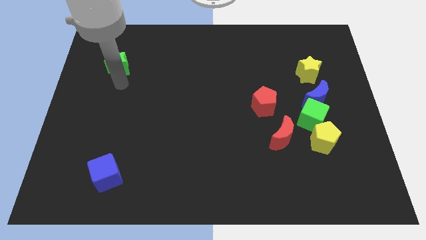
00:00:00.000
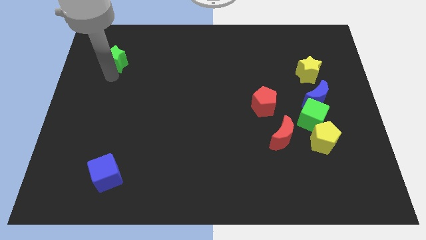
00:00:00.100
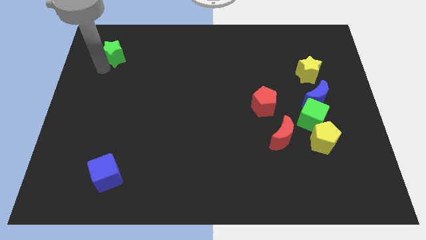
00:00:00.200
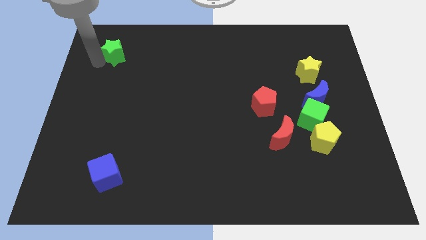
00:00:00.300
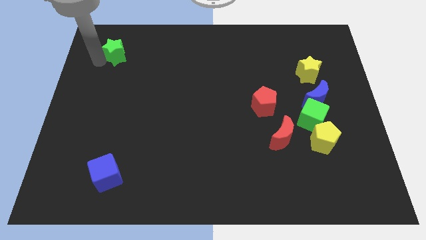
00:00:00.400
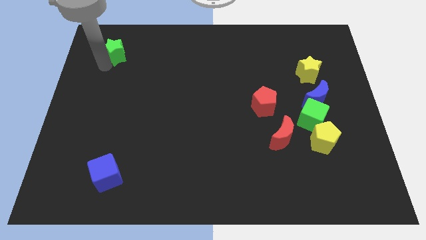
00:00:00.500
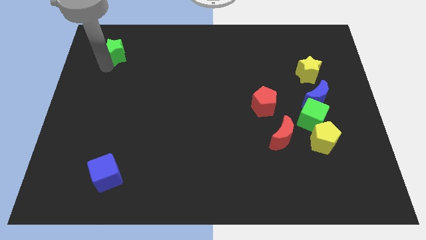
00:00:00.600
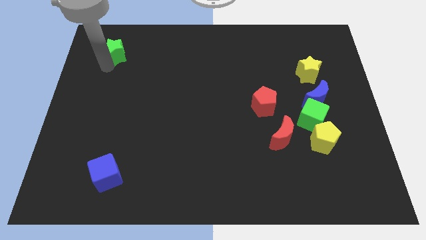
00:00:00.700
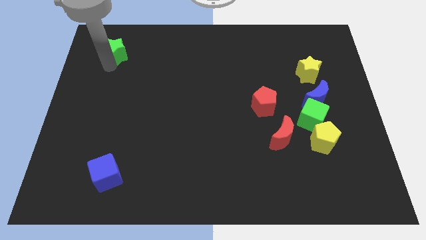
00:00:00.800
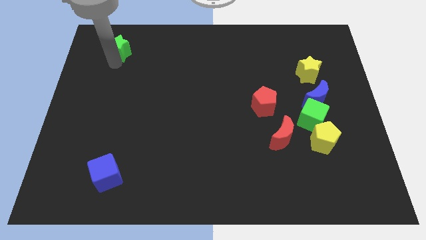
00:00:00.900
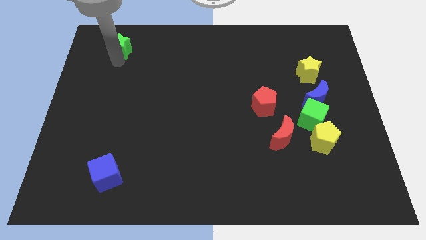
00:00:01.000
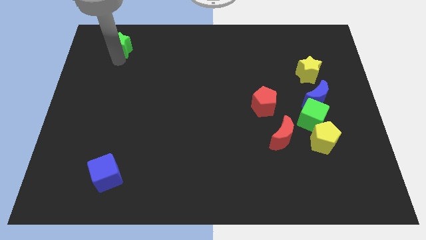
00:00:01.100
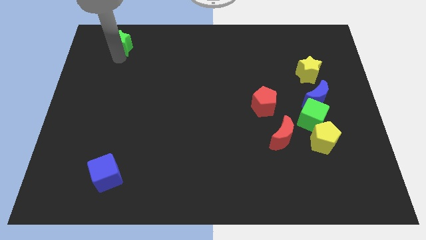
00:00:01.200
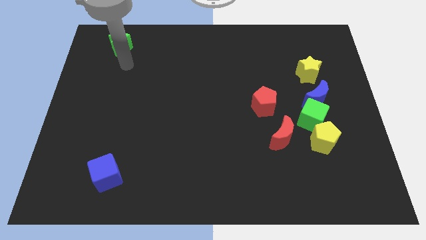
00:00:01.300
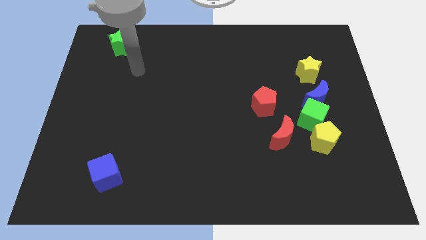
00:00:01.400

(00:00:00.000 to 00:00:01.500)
move green star upwards

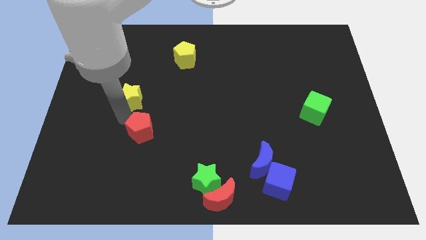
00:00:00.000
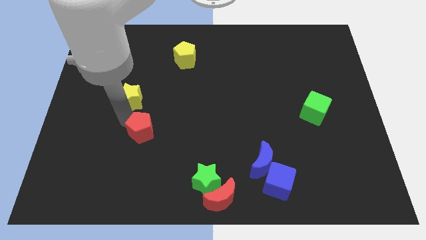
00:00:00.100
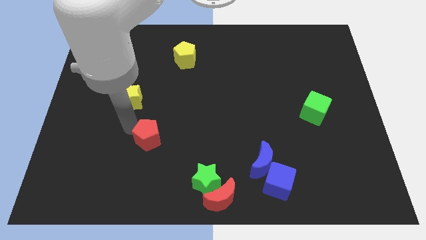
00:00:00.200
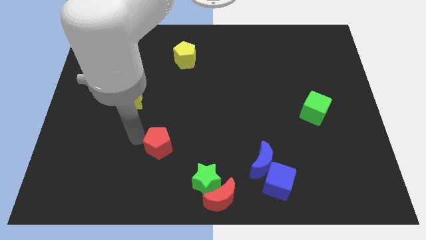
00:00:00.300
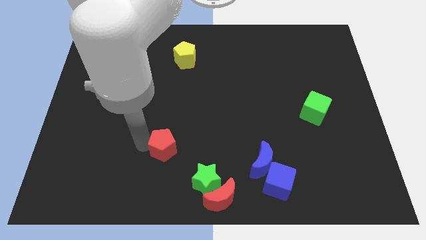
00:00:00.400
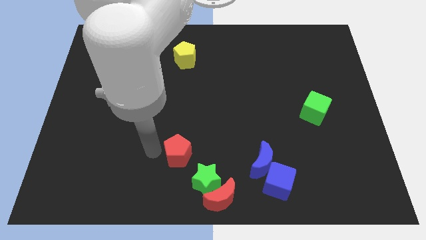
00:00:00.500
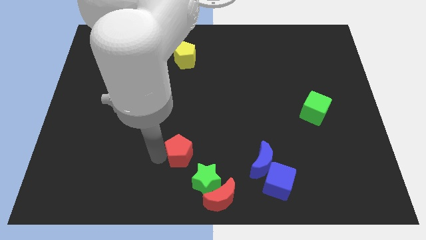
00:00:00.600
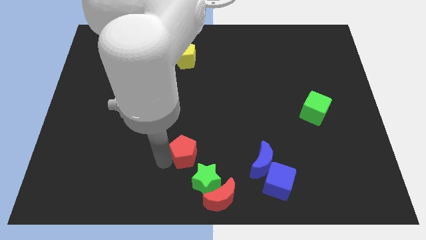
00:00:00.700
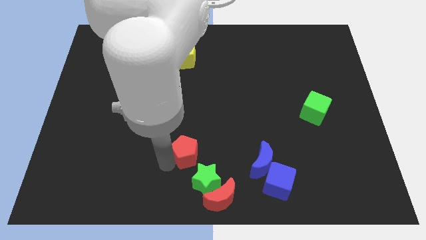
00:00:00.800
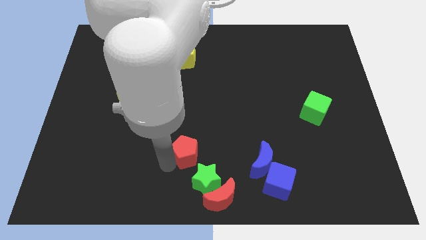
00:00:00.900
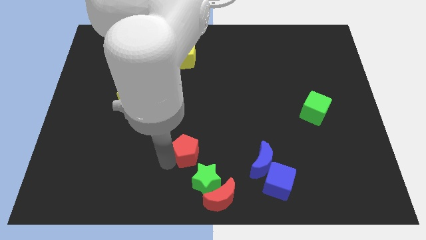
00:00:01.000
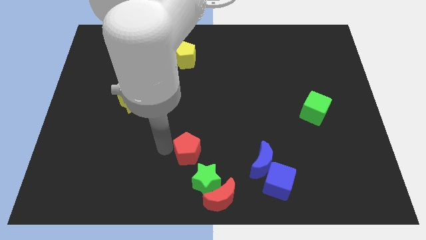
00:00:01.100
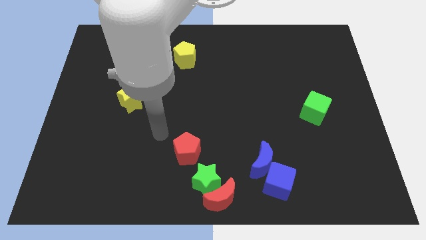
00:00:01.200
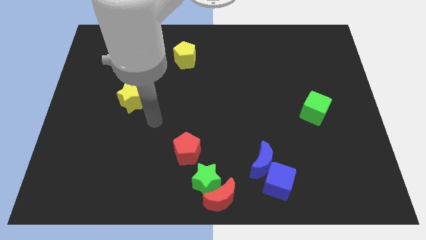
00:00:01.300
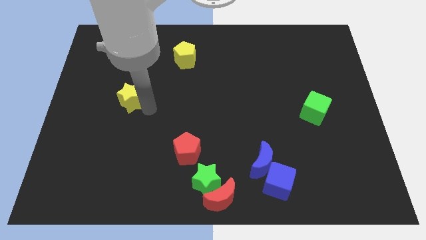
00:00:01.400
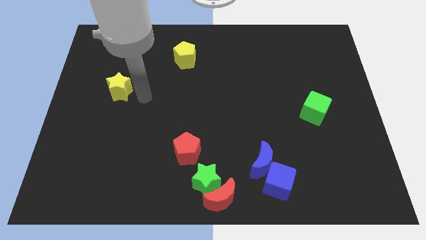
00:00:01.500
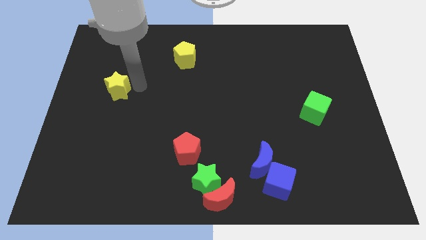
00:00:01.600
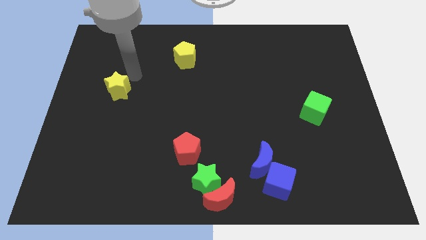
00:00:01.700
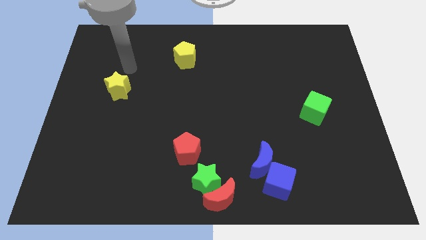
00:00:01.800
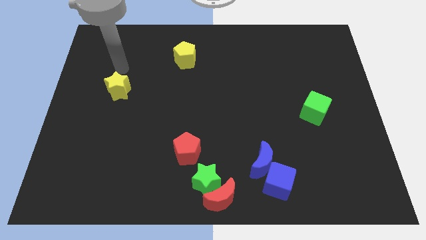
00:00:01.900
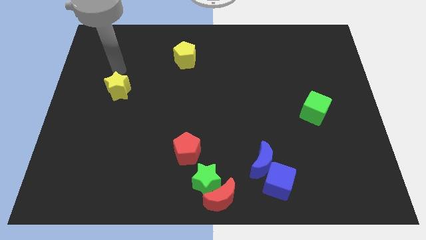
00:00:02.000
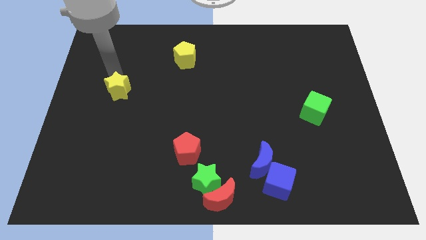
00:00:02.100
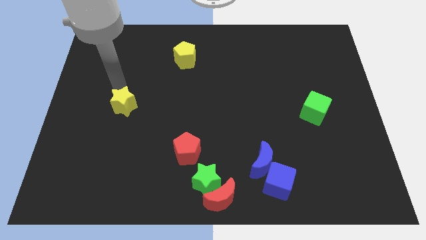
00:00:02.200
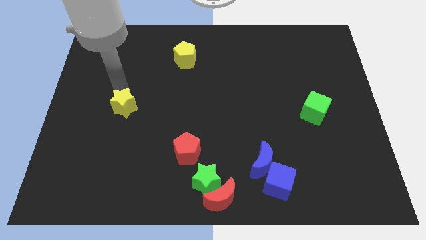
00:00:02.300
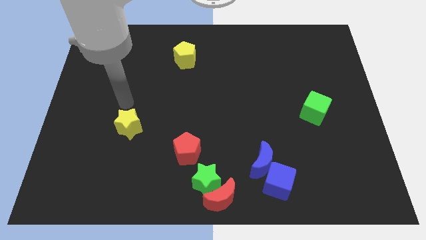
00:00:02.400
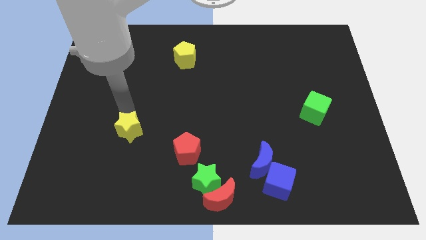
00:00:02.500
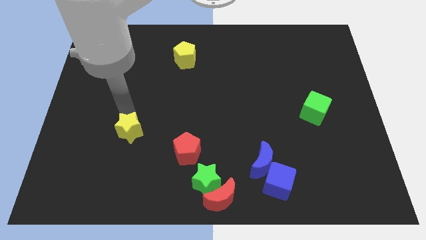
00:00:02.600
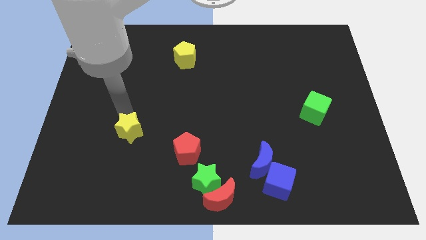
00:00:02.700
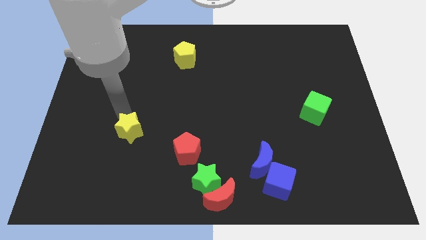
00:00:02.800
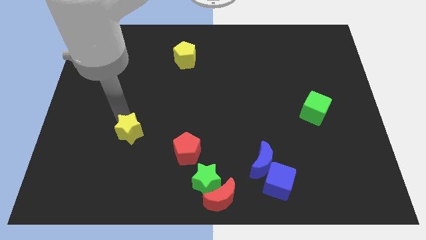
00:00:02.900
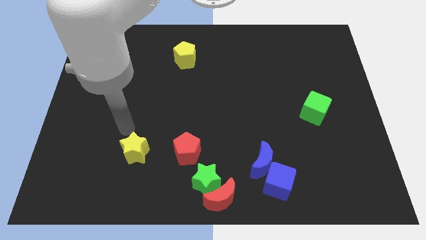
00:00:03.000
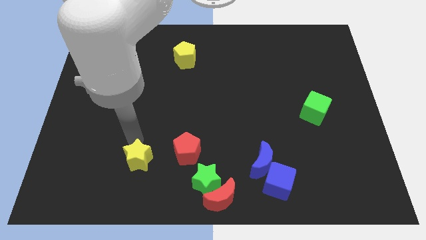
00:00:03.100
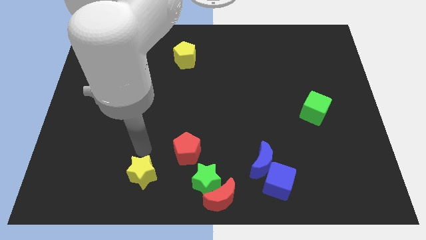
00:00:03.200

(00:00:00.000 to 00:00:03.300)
place the yellow star parallel to the red pentagon

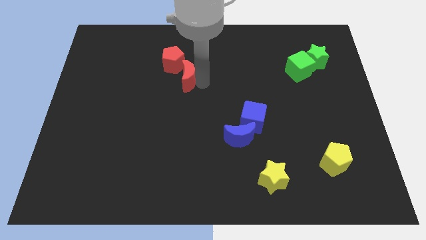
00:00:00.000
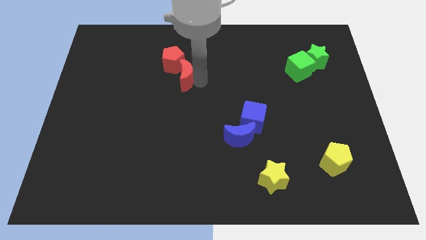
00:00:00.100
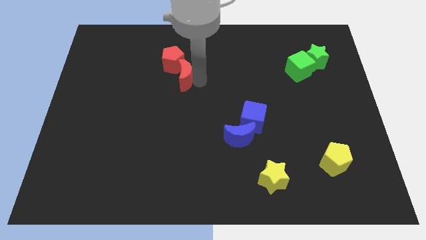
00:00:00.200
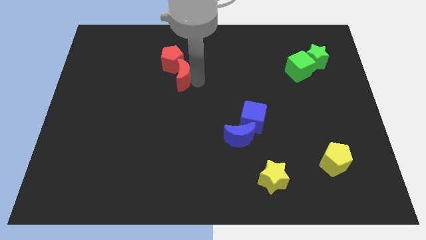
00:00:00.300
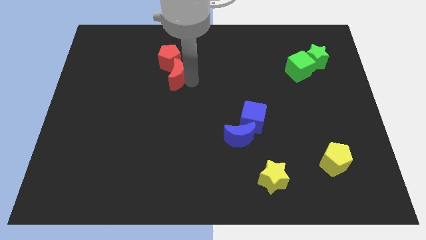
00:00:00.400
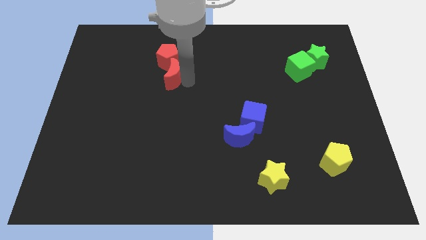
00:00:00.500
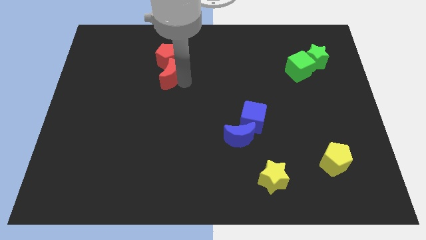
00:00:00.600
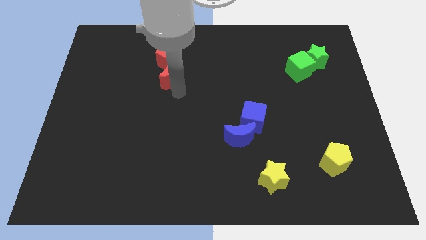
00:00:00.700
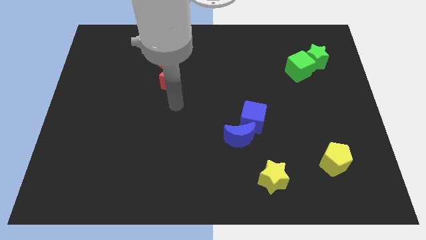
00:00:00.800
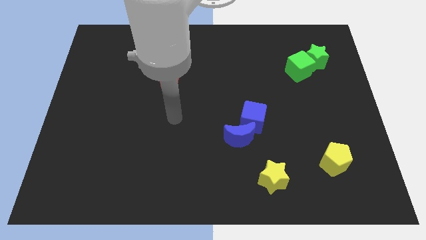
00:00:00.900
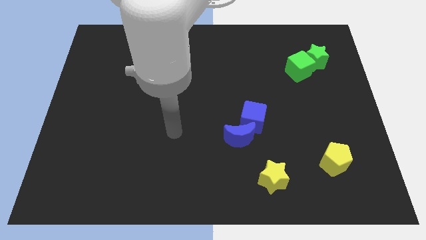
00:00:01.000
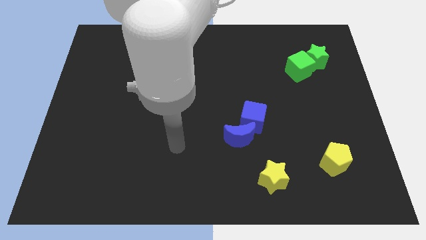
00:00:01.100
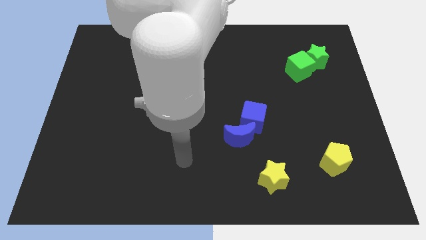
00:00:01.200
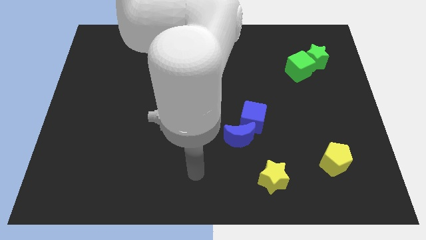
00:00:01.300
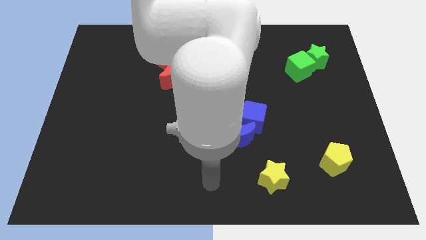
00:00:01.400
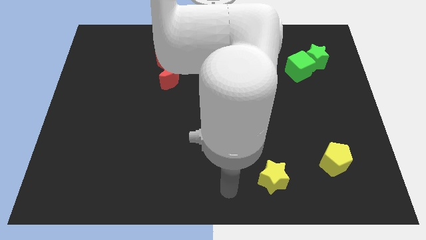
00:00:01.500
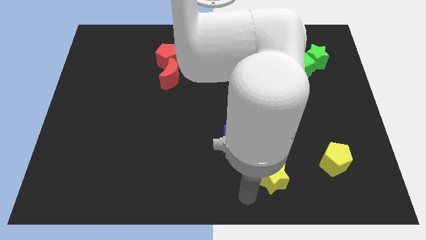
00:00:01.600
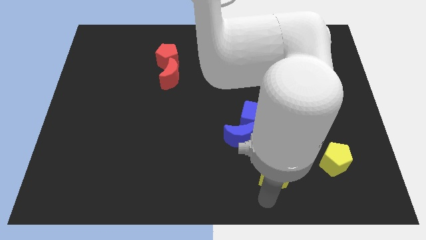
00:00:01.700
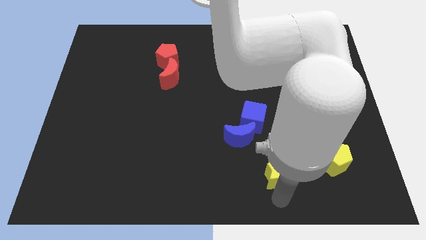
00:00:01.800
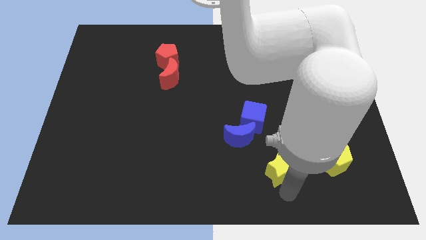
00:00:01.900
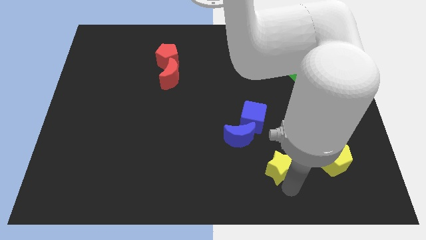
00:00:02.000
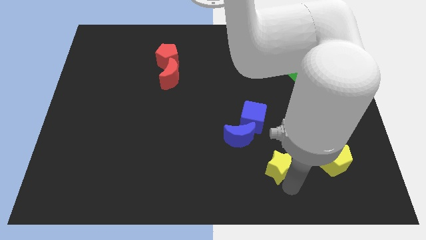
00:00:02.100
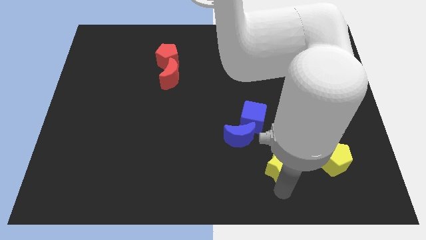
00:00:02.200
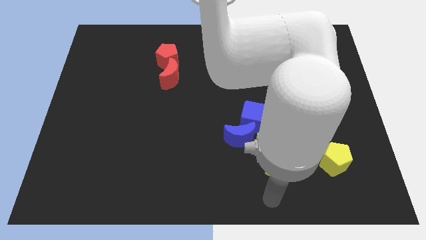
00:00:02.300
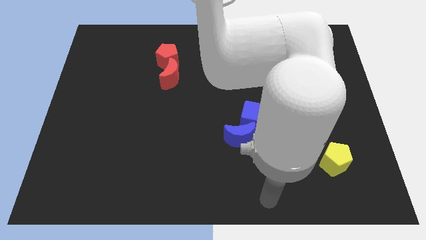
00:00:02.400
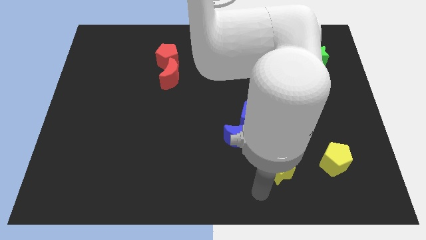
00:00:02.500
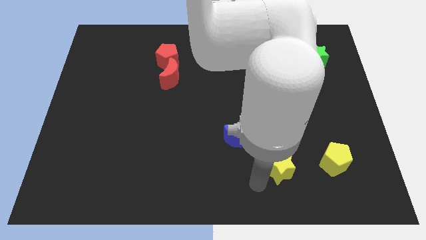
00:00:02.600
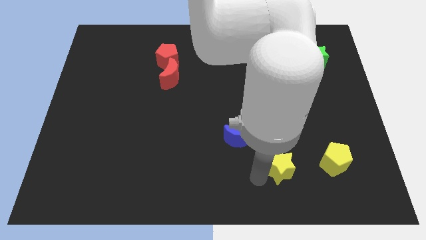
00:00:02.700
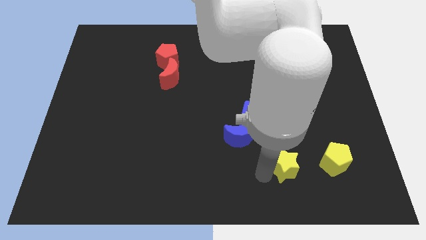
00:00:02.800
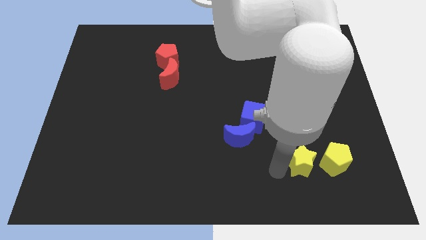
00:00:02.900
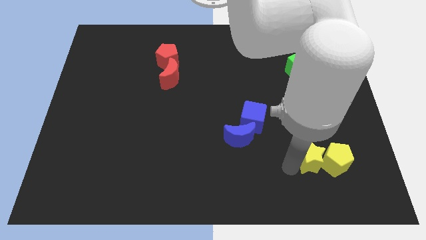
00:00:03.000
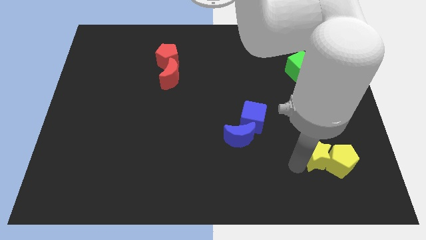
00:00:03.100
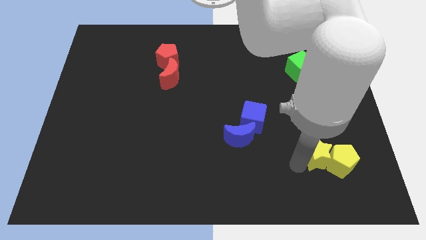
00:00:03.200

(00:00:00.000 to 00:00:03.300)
move yellow star towards yellow penatgon

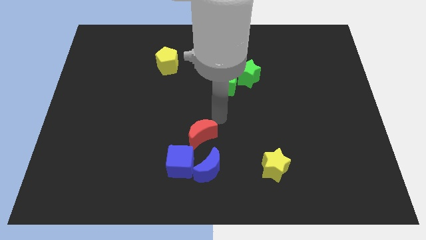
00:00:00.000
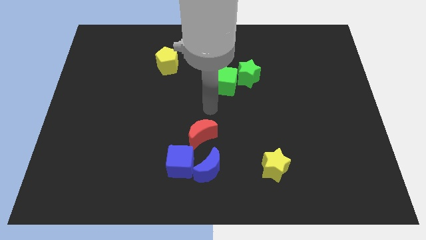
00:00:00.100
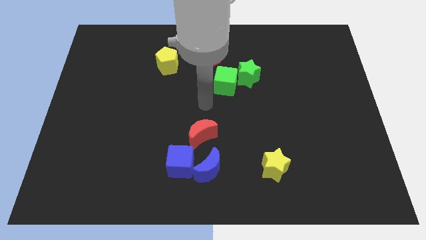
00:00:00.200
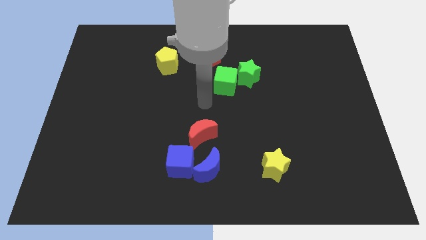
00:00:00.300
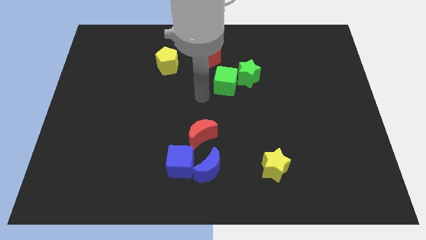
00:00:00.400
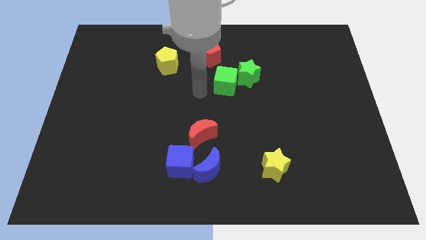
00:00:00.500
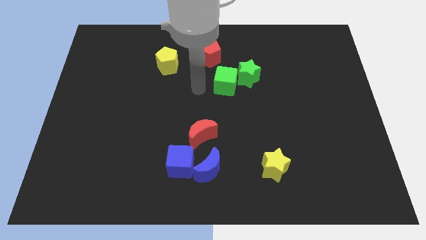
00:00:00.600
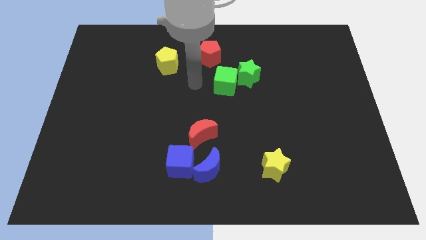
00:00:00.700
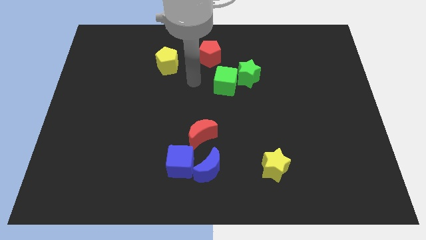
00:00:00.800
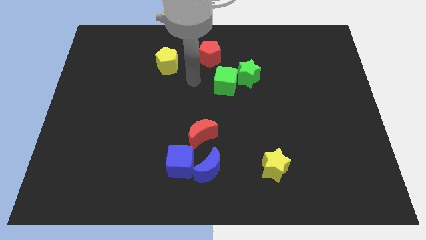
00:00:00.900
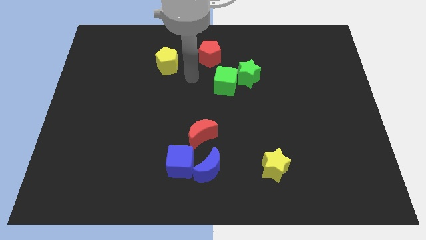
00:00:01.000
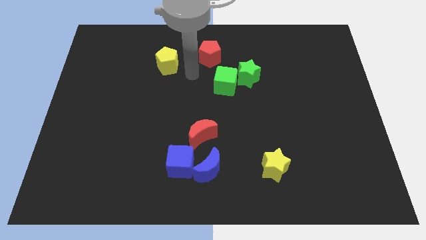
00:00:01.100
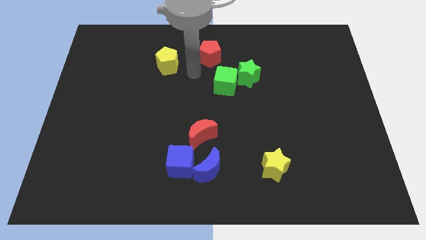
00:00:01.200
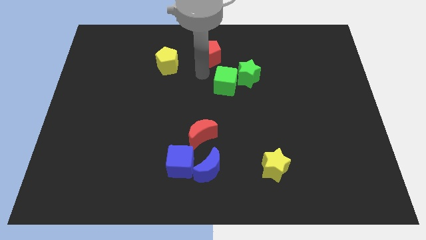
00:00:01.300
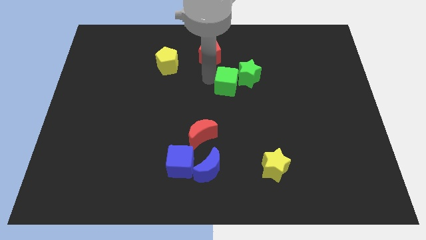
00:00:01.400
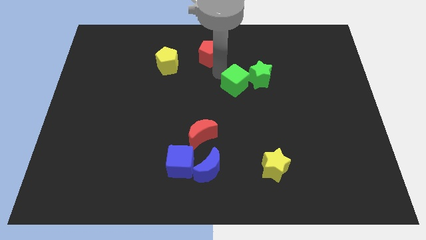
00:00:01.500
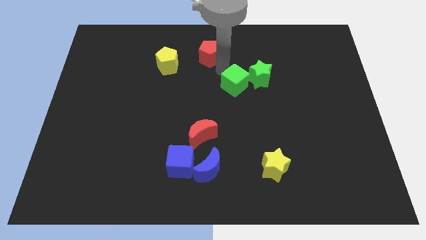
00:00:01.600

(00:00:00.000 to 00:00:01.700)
move the green blocks slightly to the right
